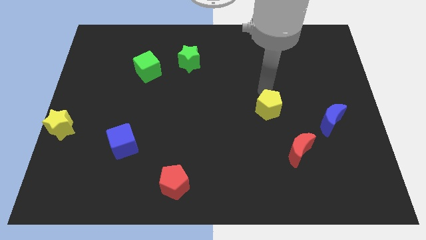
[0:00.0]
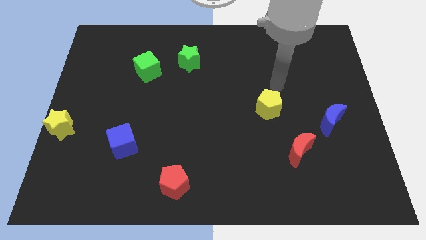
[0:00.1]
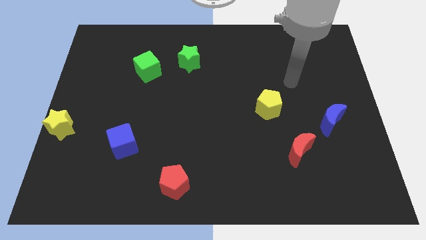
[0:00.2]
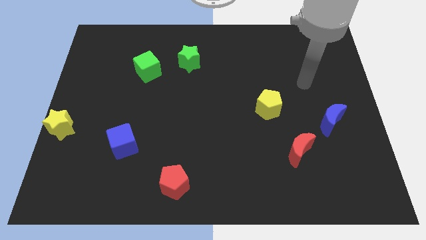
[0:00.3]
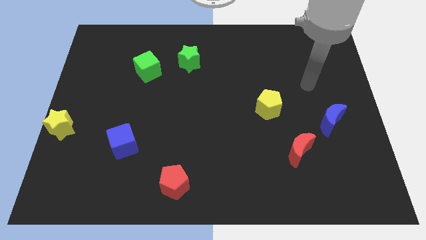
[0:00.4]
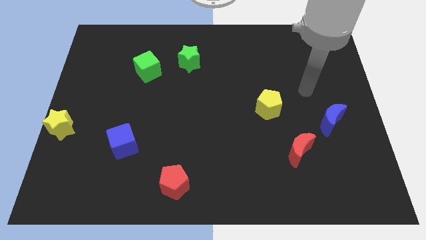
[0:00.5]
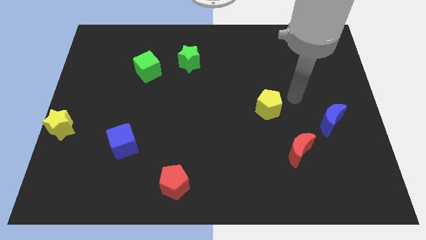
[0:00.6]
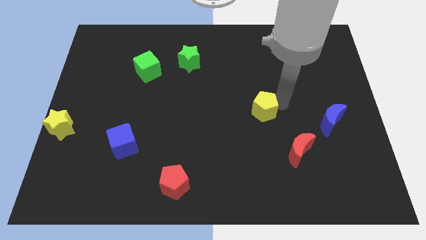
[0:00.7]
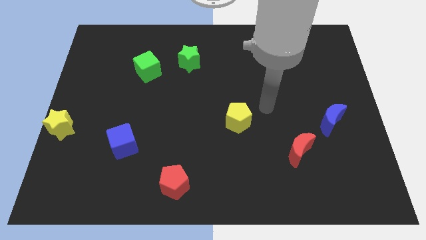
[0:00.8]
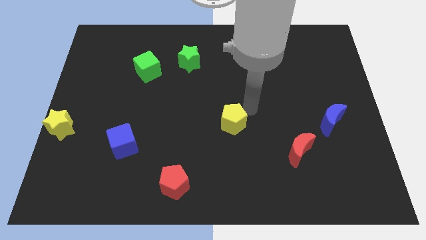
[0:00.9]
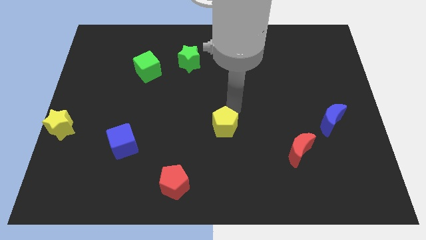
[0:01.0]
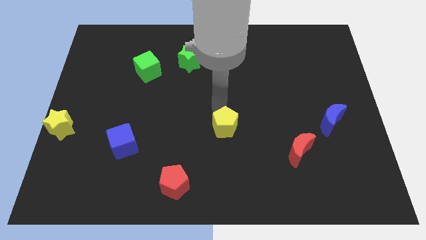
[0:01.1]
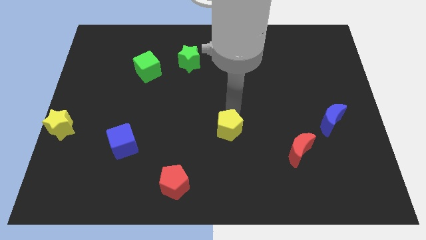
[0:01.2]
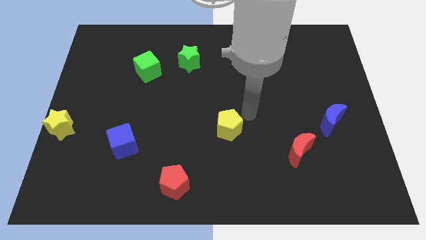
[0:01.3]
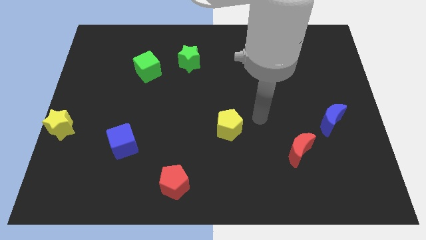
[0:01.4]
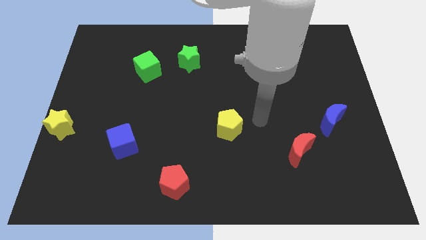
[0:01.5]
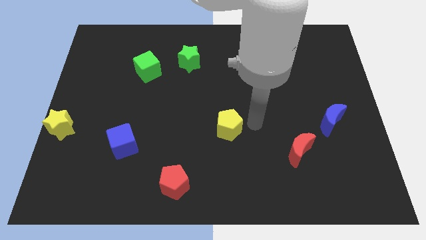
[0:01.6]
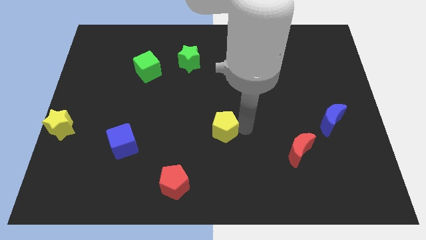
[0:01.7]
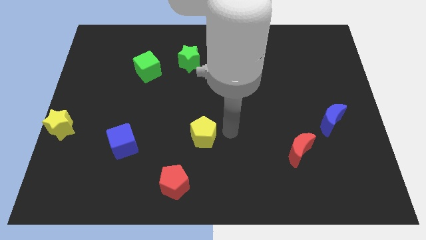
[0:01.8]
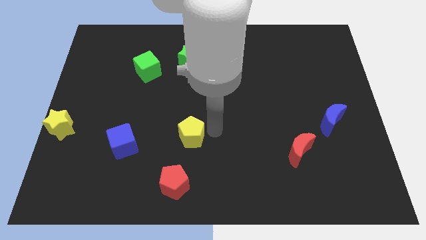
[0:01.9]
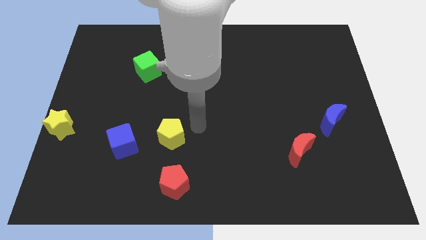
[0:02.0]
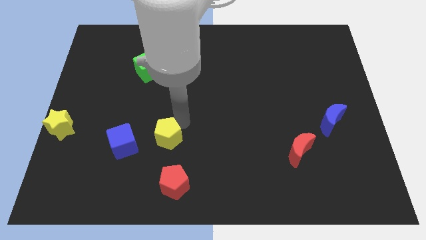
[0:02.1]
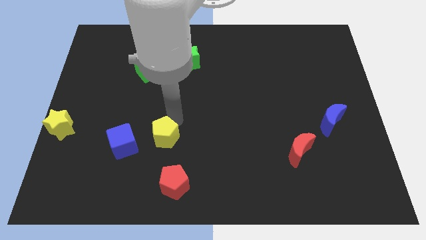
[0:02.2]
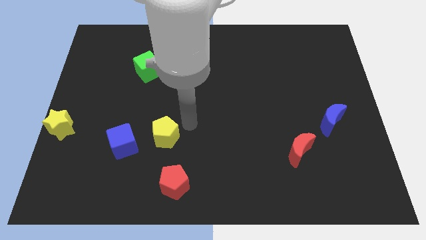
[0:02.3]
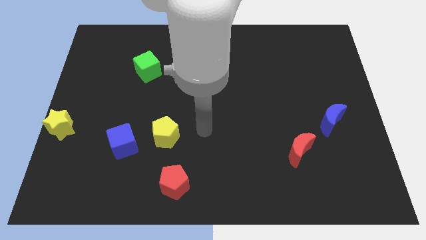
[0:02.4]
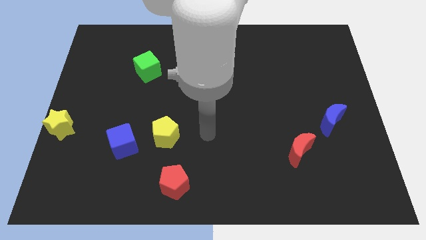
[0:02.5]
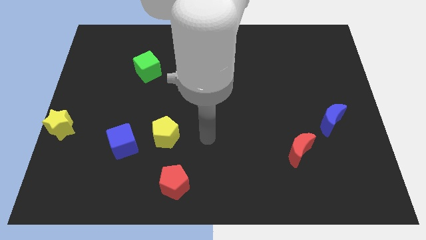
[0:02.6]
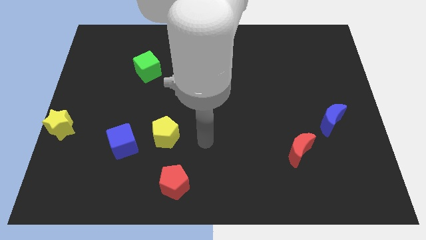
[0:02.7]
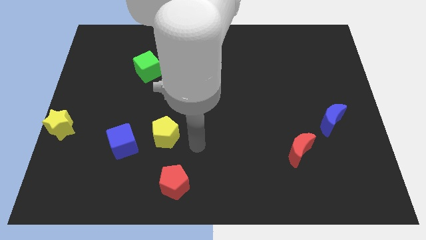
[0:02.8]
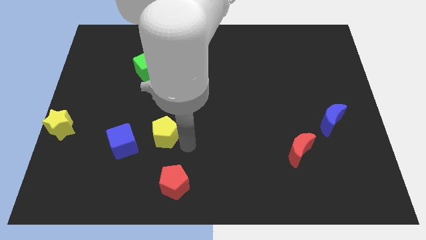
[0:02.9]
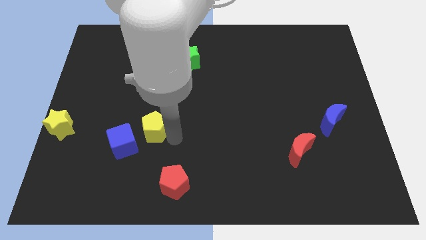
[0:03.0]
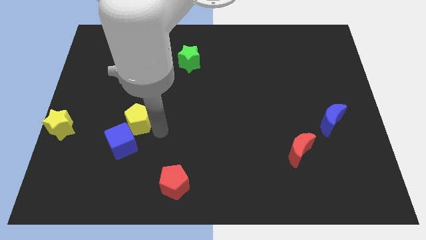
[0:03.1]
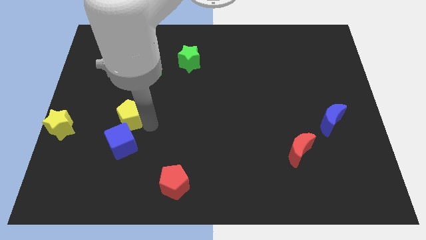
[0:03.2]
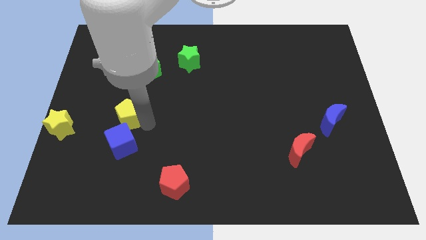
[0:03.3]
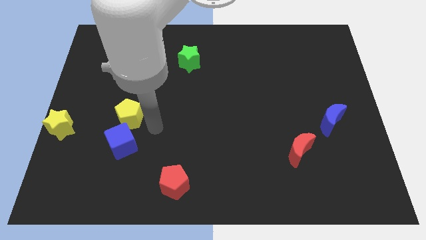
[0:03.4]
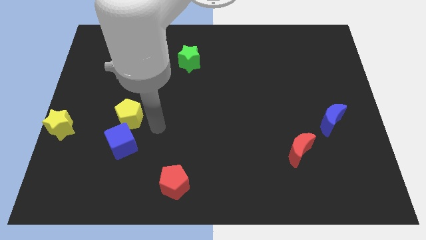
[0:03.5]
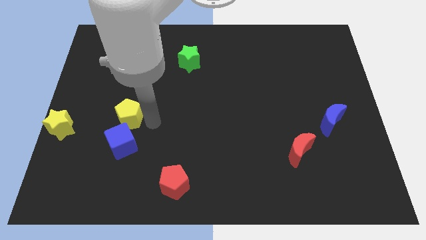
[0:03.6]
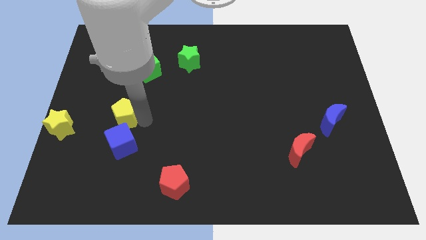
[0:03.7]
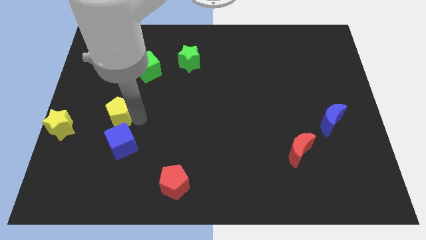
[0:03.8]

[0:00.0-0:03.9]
place the yellow pentagon to the top side of the blue cube

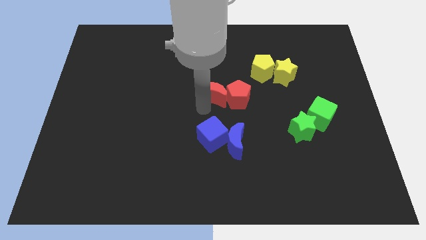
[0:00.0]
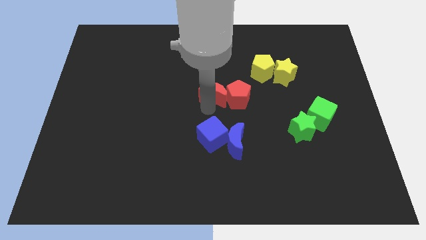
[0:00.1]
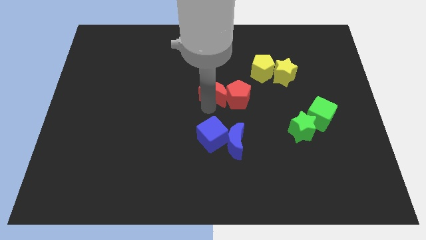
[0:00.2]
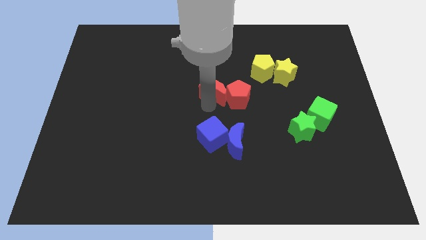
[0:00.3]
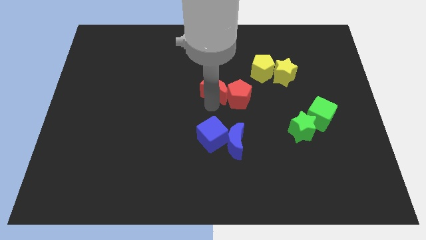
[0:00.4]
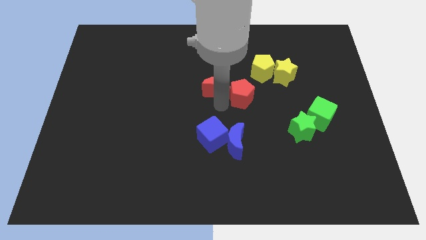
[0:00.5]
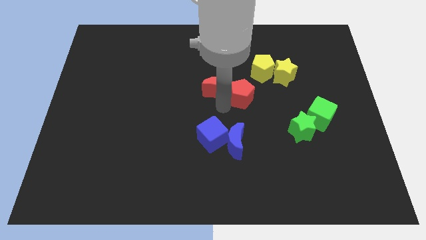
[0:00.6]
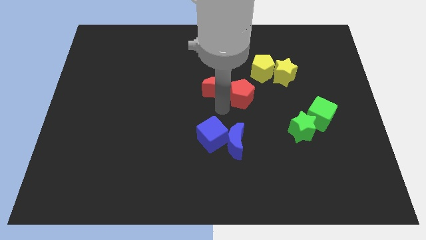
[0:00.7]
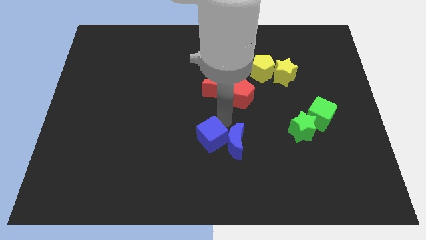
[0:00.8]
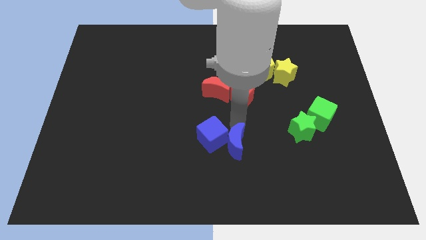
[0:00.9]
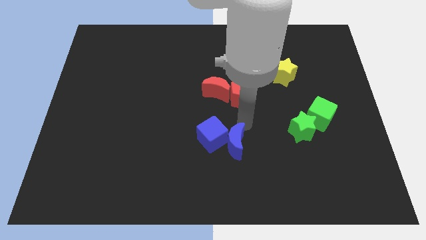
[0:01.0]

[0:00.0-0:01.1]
slightly push the red blocks towards the top side

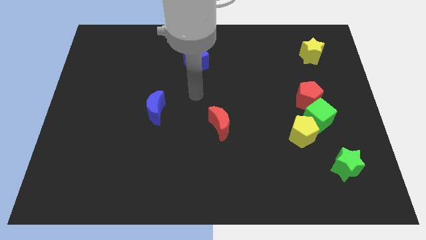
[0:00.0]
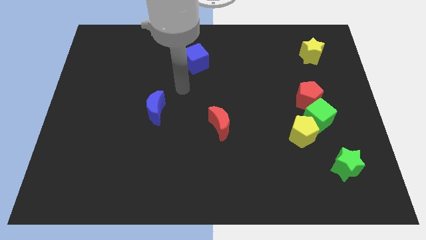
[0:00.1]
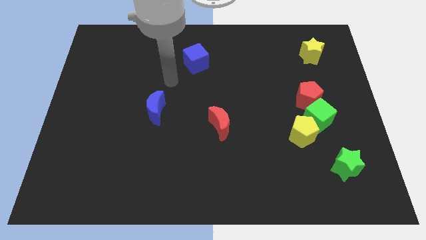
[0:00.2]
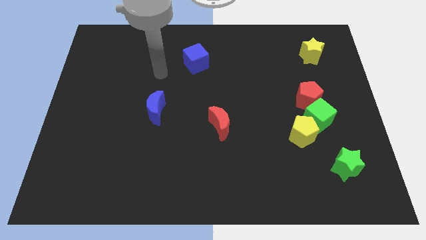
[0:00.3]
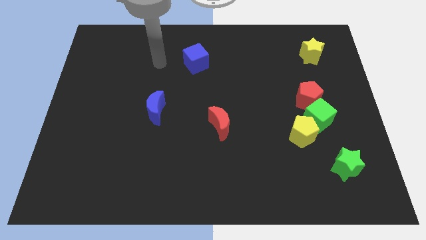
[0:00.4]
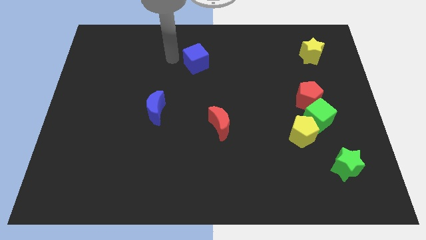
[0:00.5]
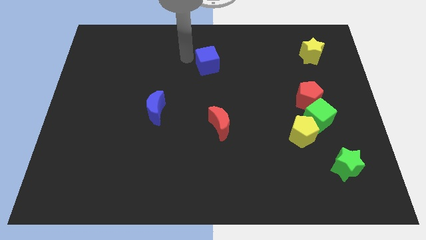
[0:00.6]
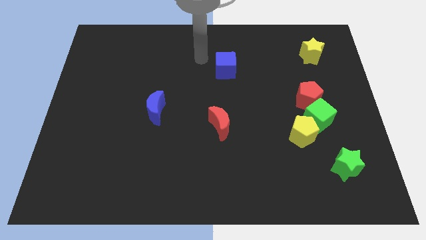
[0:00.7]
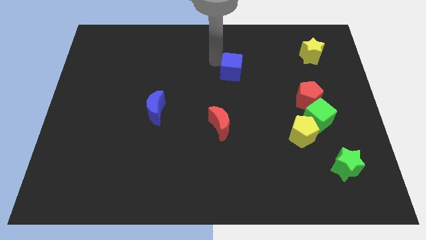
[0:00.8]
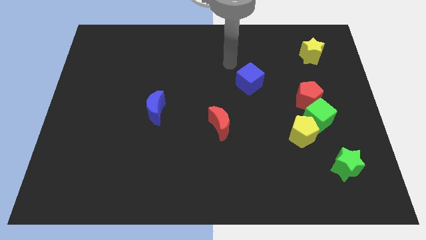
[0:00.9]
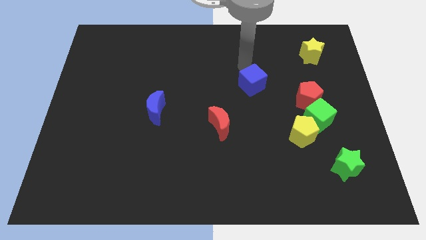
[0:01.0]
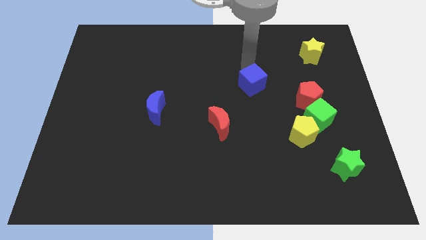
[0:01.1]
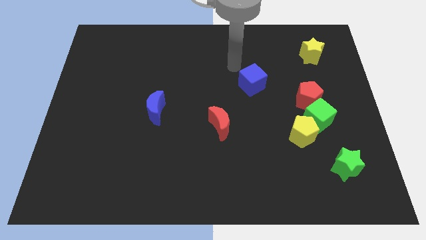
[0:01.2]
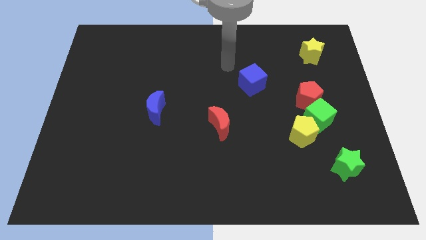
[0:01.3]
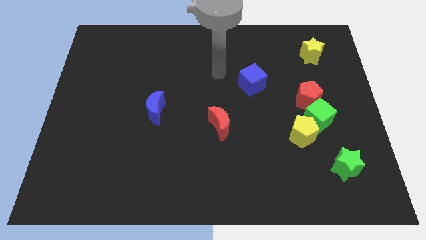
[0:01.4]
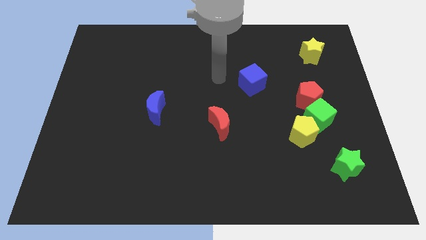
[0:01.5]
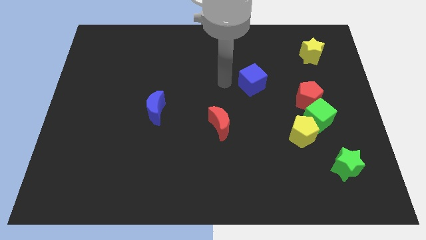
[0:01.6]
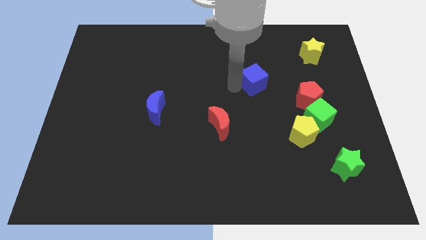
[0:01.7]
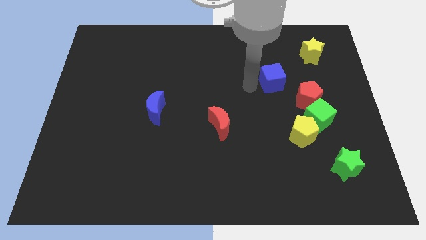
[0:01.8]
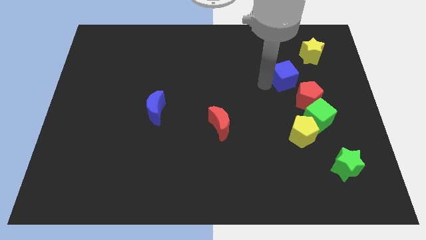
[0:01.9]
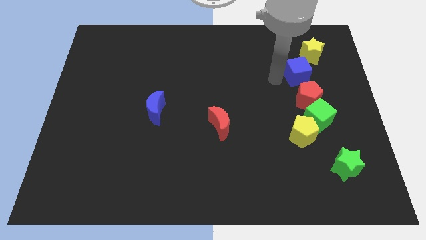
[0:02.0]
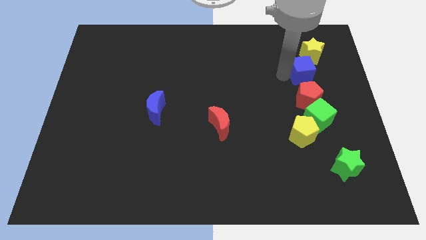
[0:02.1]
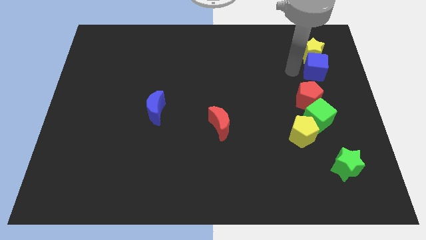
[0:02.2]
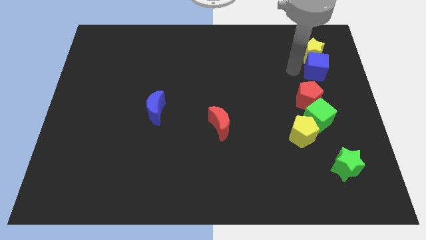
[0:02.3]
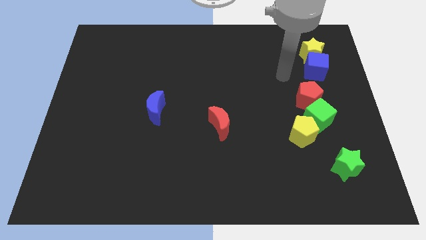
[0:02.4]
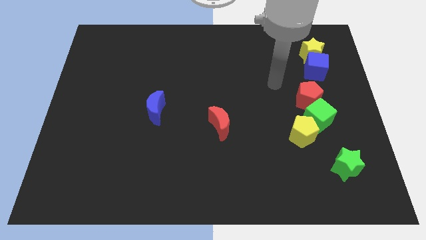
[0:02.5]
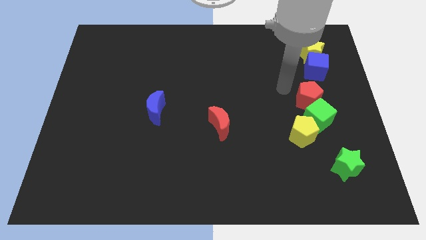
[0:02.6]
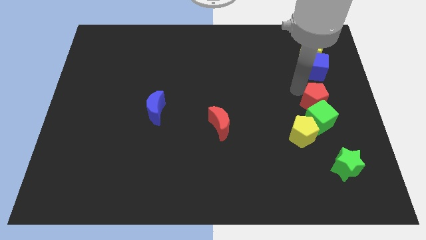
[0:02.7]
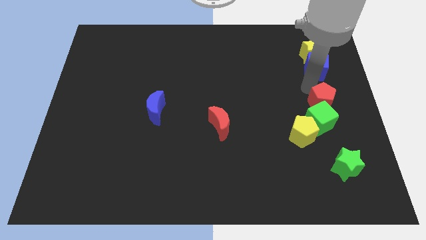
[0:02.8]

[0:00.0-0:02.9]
place the blue cube in between the yellow star and red pentagon

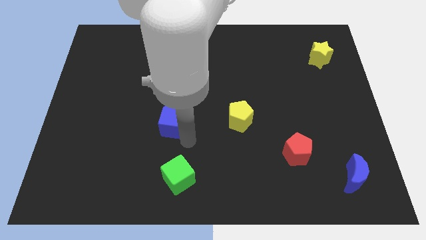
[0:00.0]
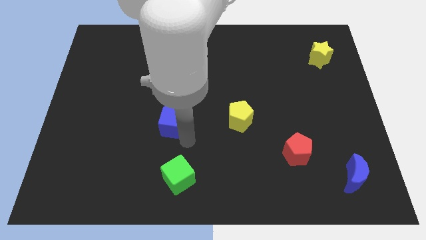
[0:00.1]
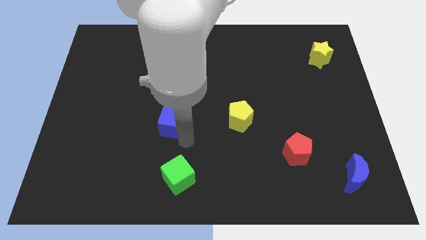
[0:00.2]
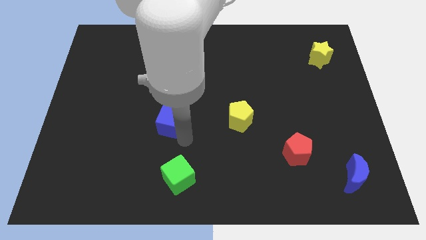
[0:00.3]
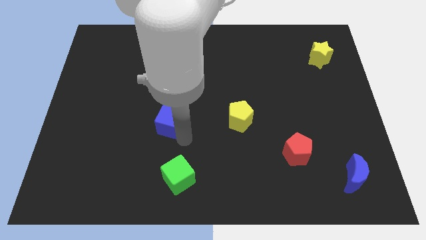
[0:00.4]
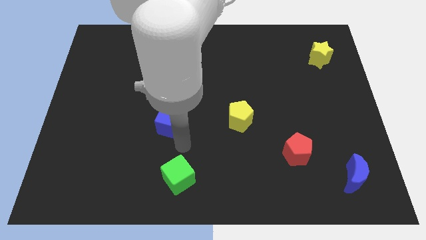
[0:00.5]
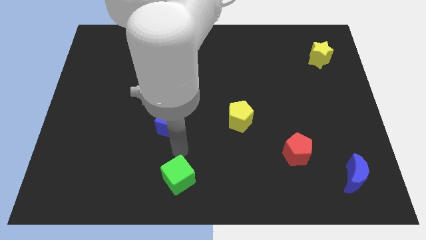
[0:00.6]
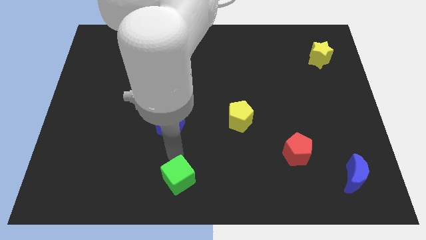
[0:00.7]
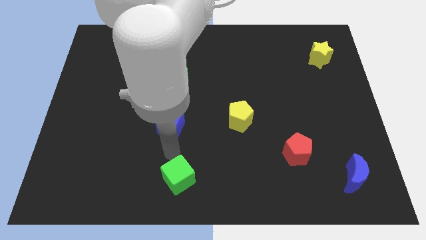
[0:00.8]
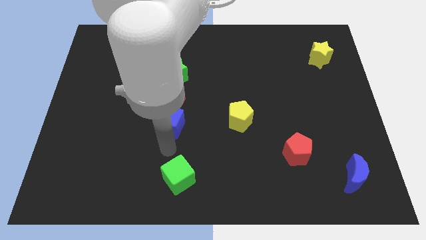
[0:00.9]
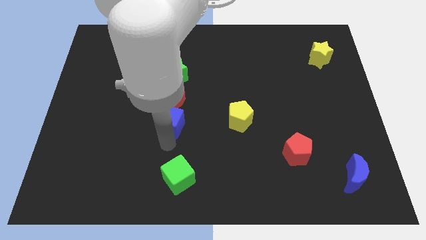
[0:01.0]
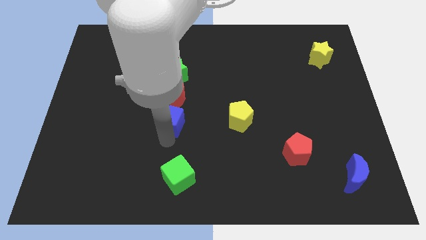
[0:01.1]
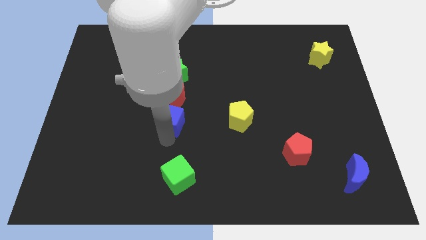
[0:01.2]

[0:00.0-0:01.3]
place the blue cube below the red moon
